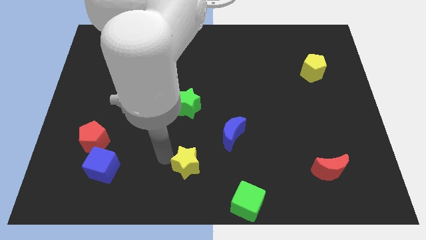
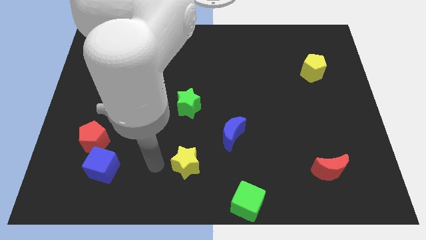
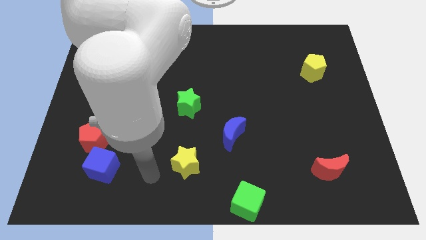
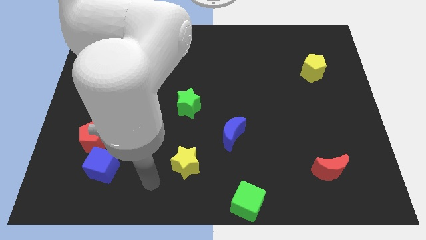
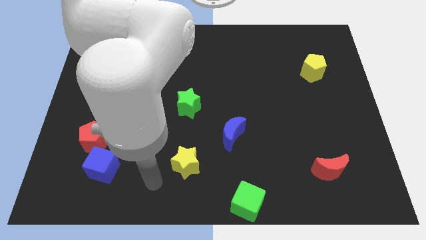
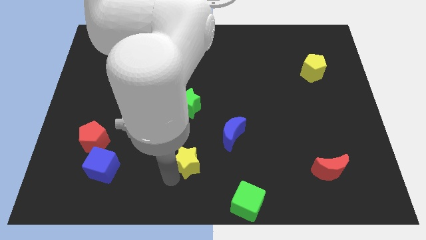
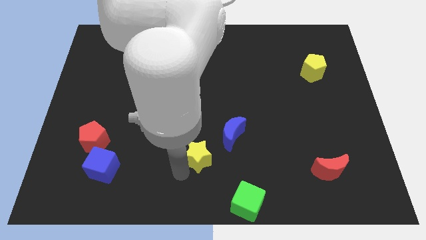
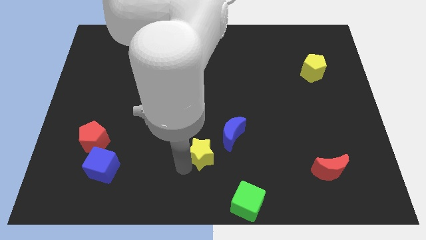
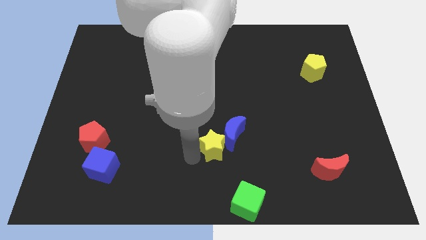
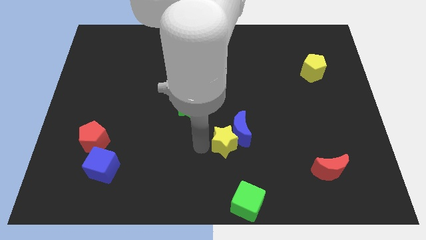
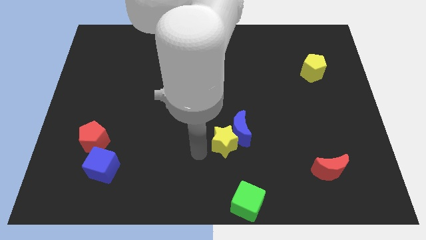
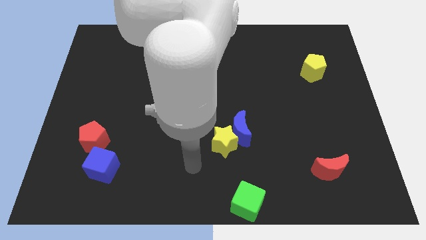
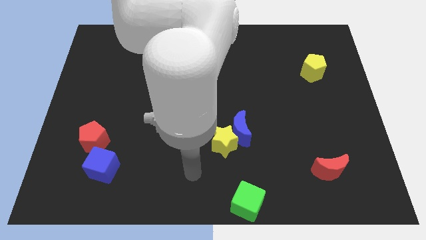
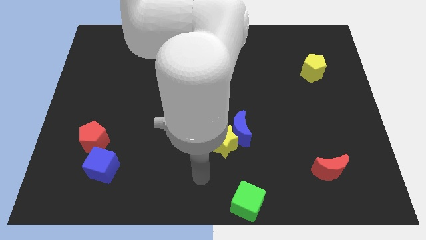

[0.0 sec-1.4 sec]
move yellow star into the blue moon

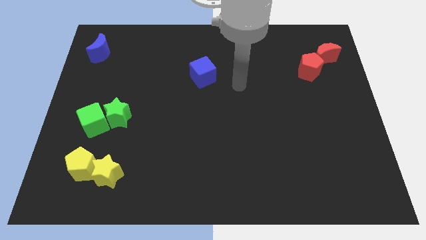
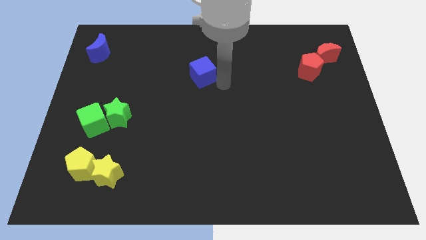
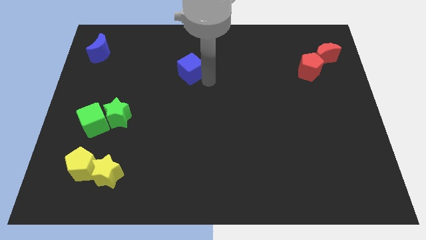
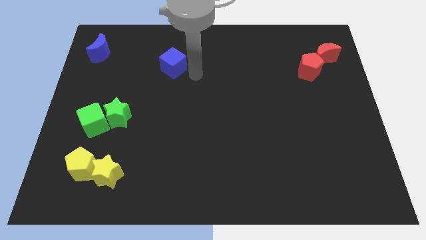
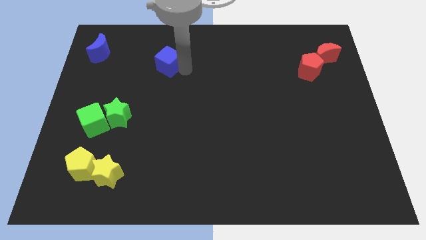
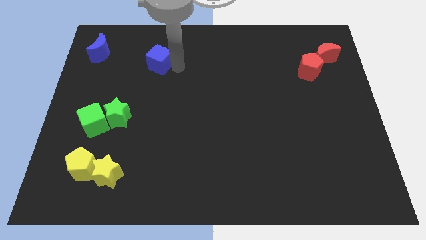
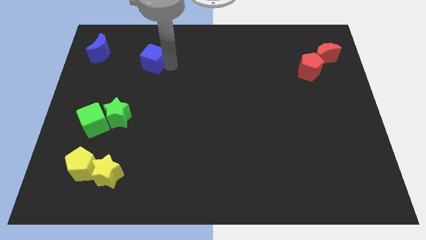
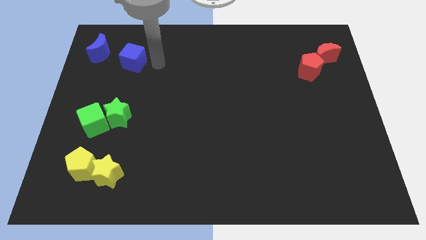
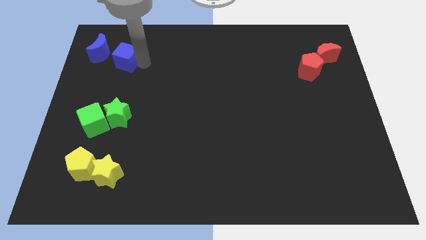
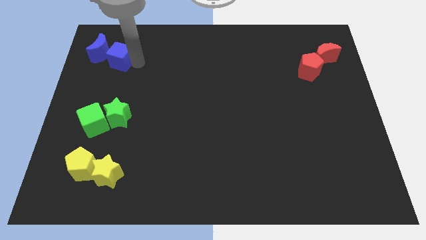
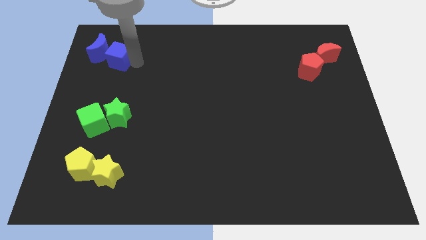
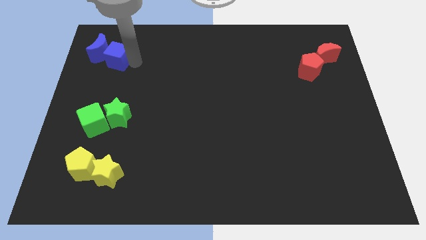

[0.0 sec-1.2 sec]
push blue cube into blue crescent

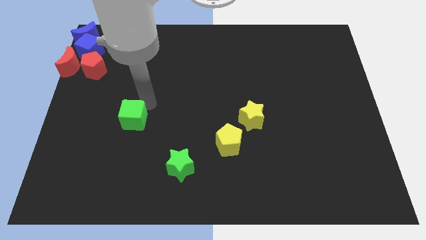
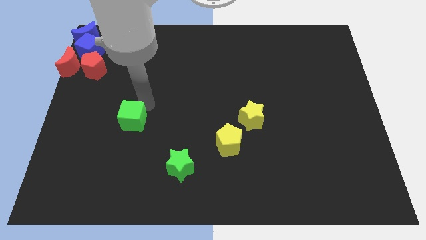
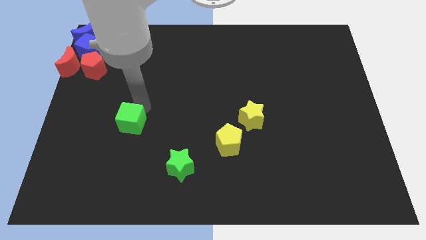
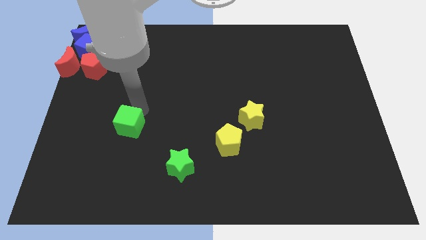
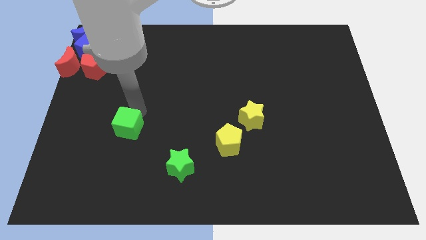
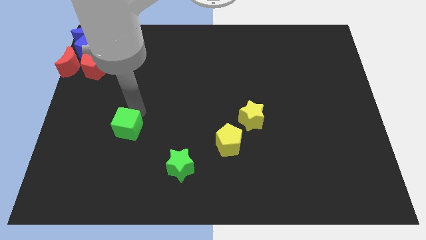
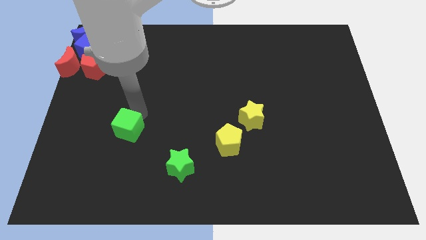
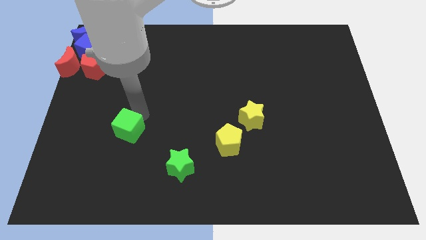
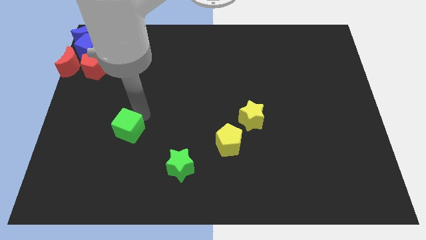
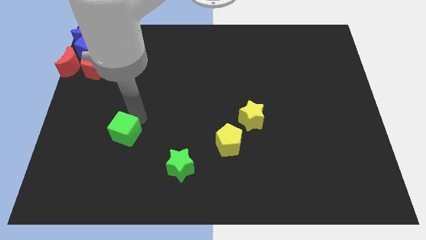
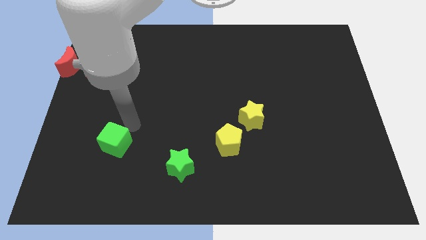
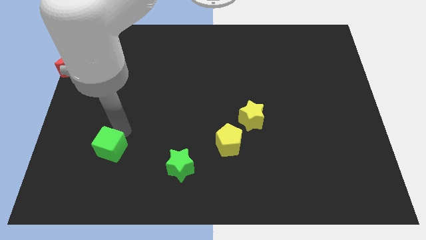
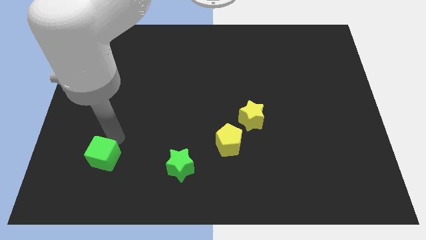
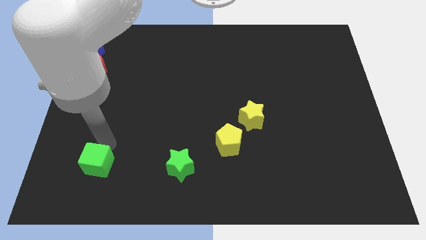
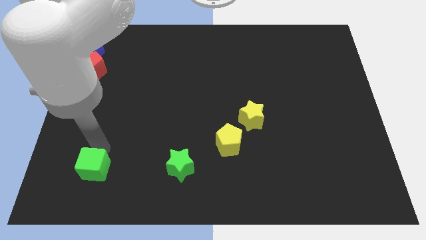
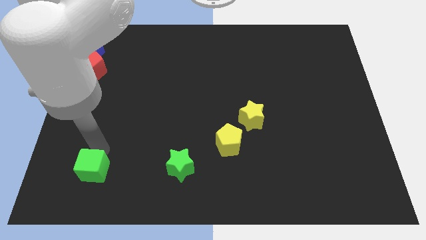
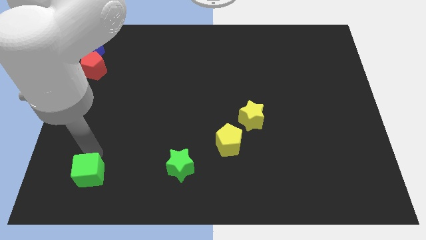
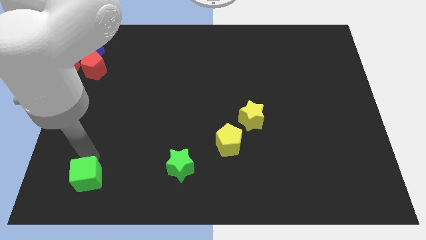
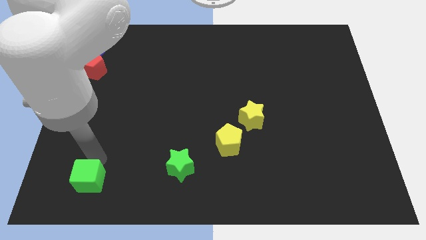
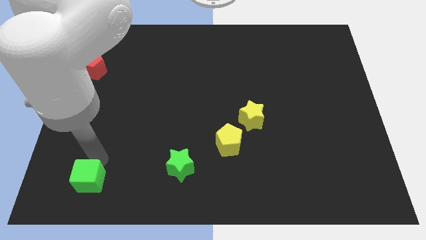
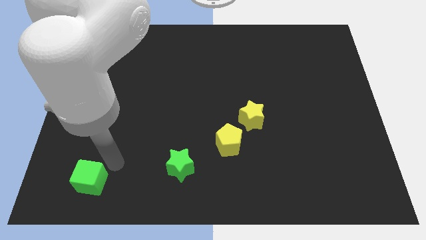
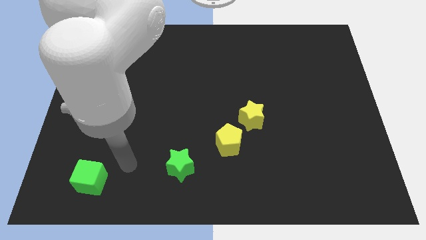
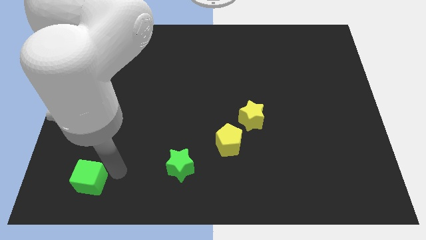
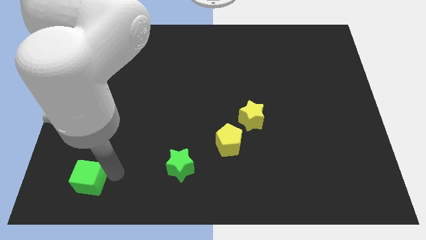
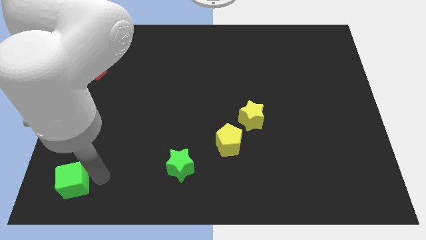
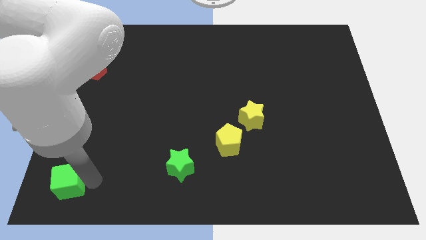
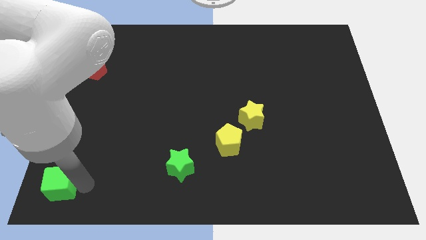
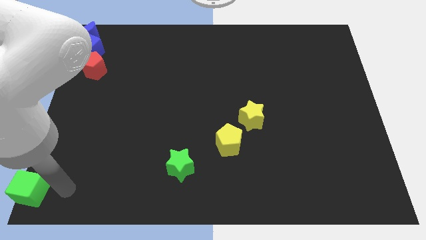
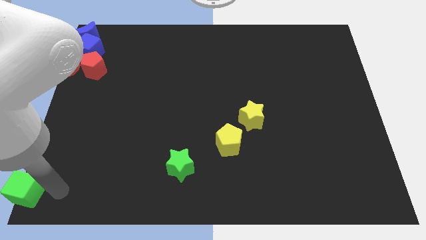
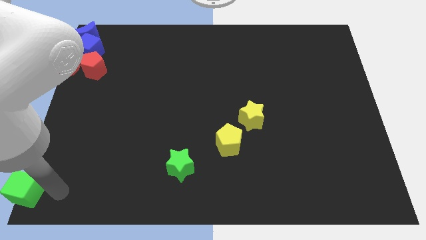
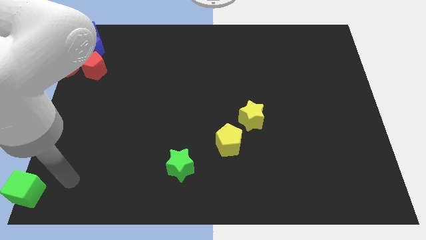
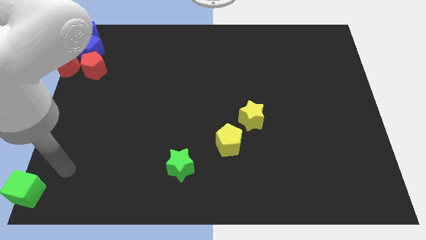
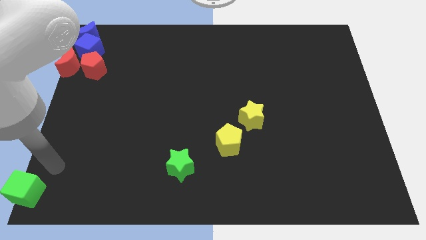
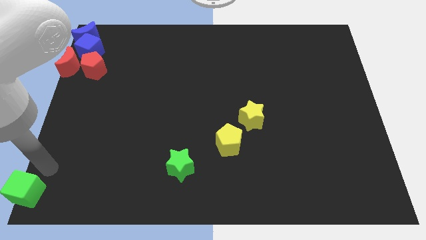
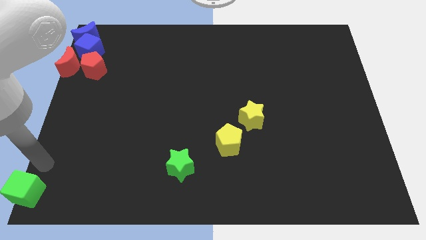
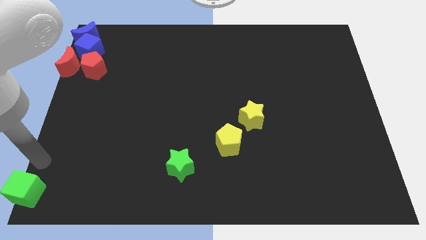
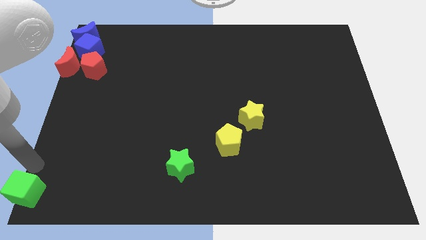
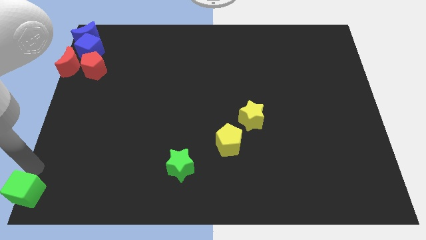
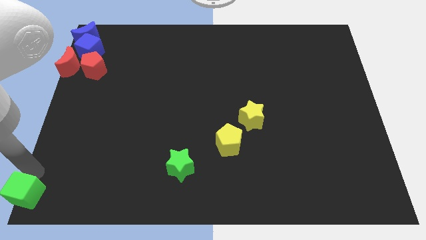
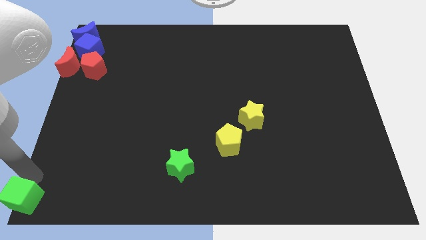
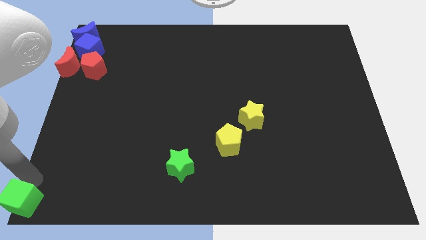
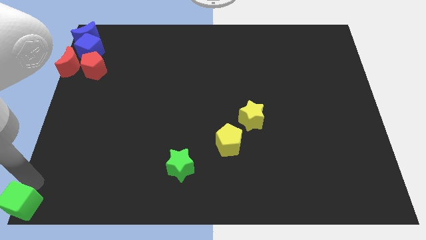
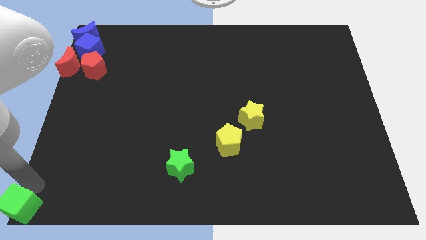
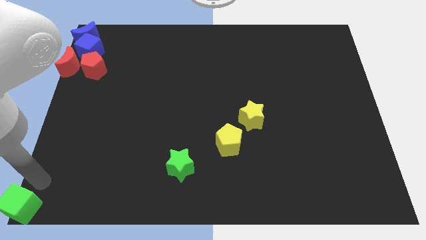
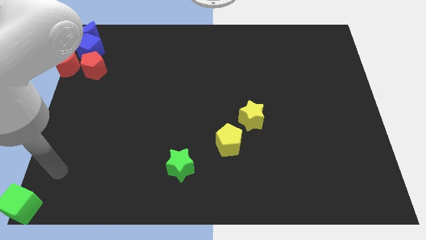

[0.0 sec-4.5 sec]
slide the green cube to the bottom left corner of the board

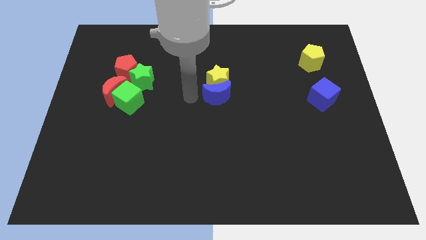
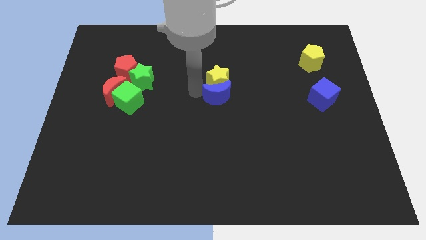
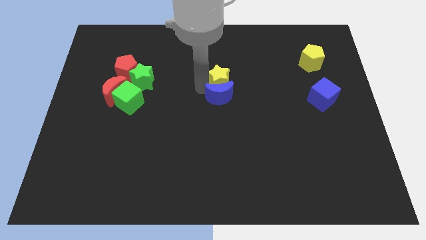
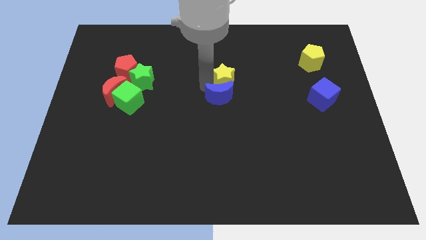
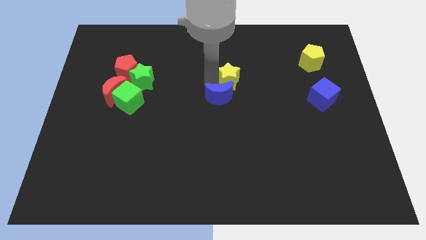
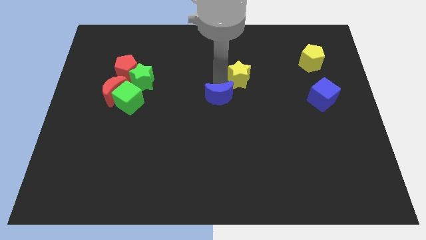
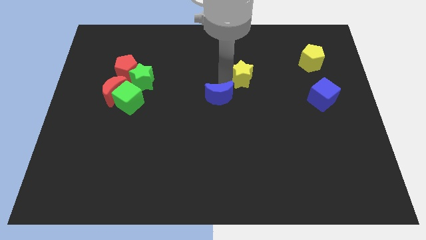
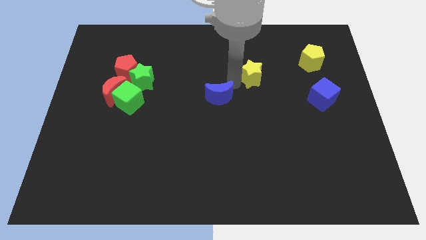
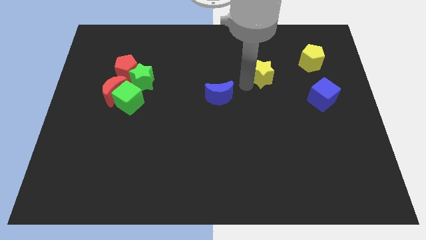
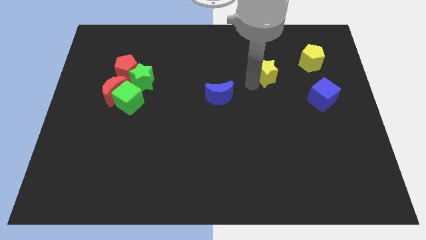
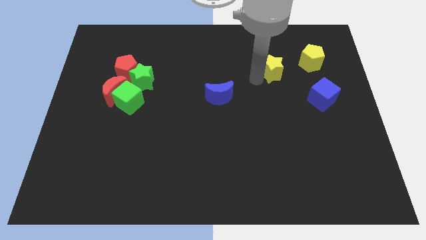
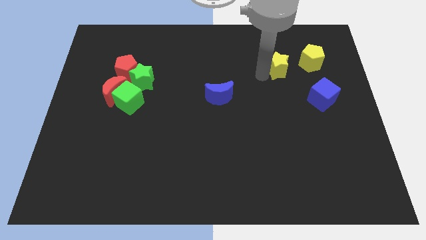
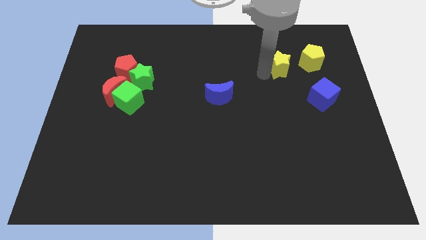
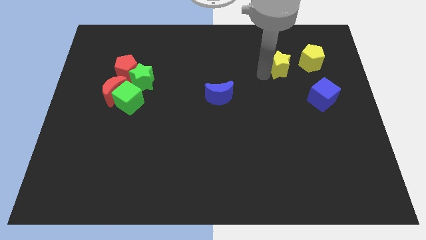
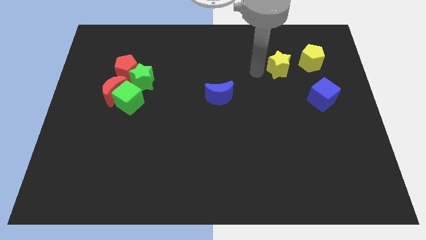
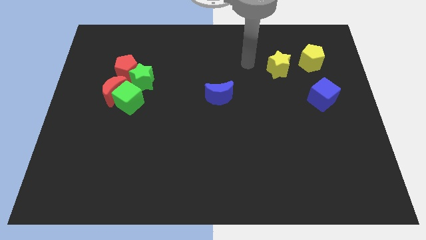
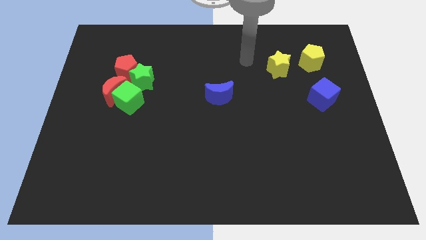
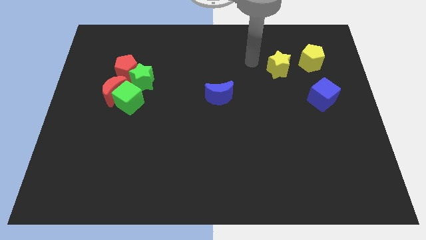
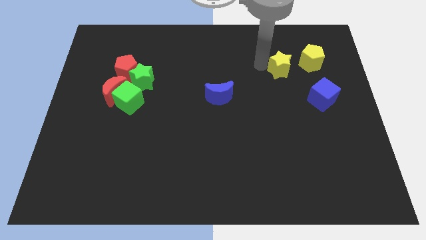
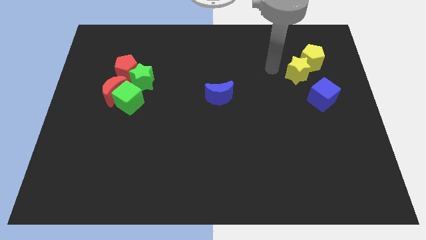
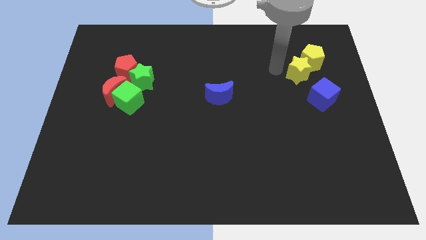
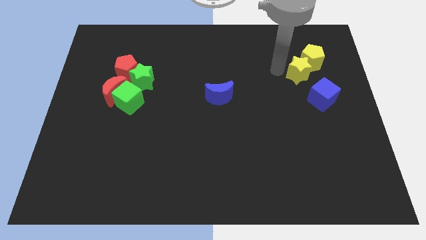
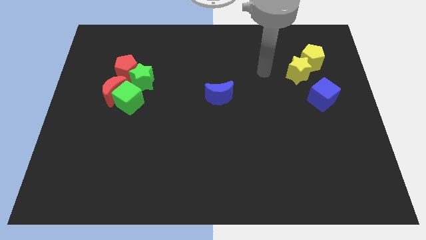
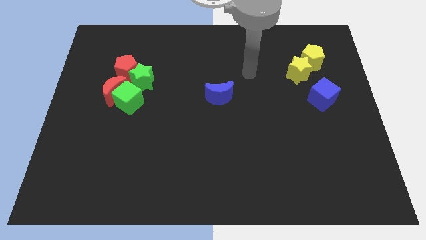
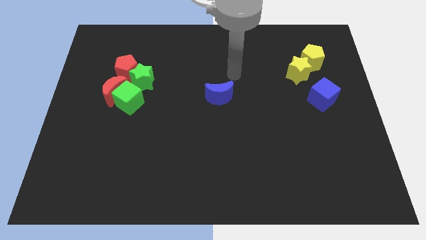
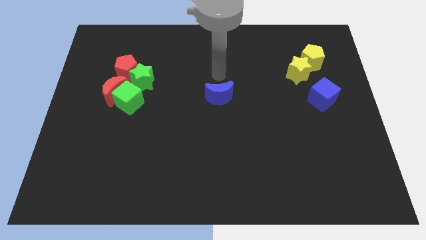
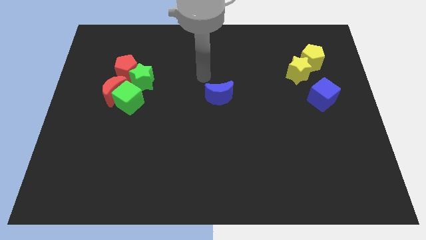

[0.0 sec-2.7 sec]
move the yellow star into the yellow pentagon
